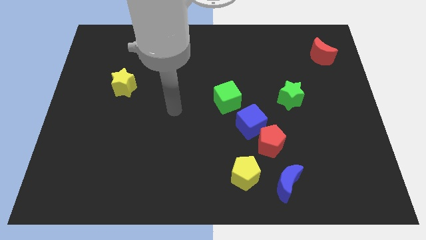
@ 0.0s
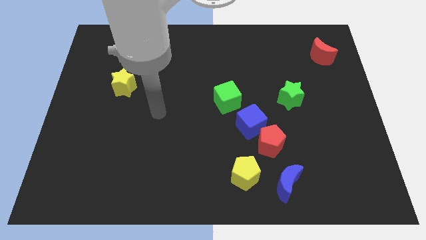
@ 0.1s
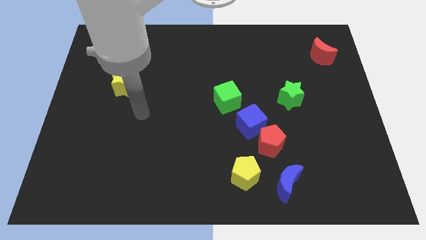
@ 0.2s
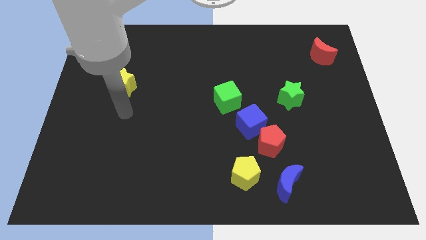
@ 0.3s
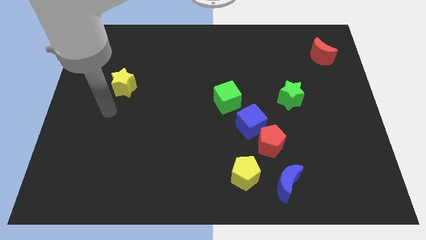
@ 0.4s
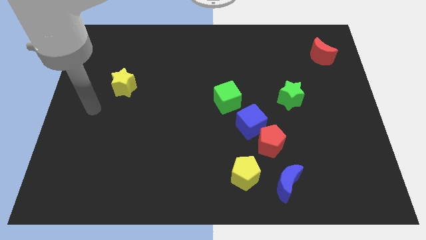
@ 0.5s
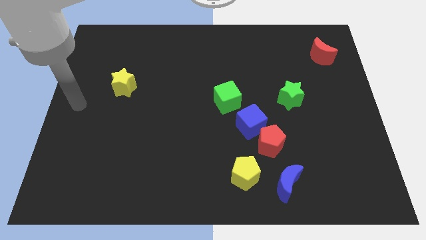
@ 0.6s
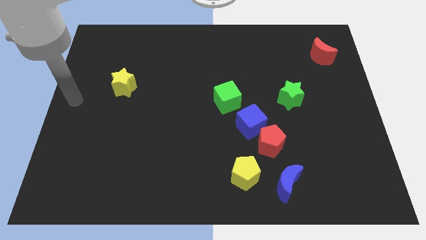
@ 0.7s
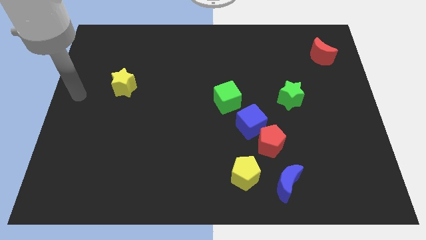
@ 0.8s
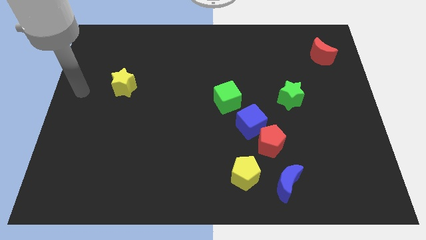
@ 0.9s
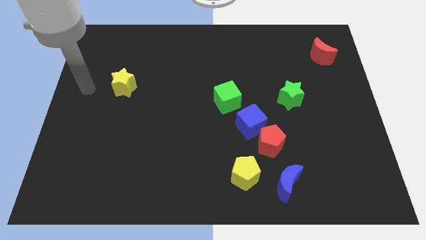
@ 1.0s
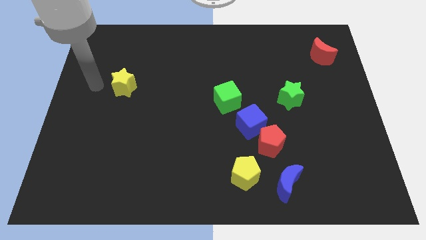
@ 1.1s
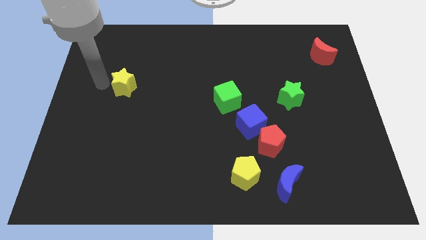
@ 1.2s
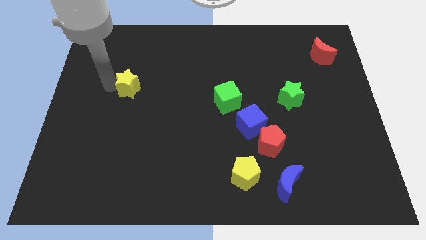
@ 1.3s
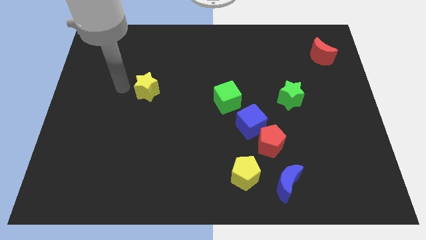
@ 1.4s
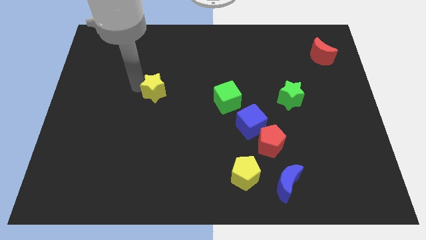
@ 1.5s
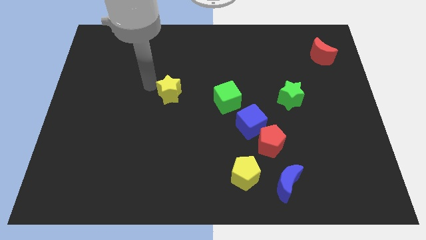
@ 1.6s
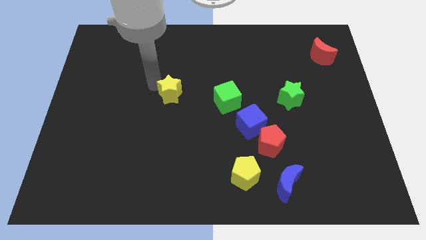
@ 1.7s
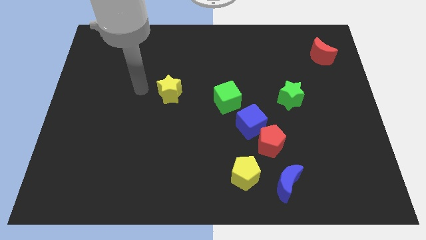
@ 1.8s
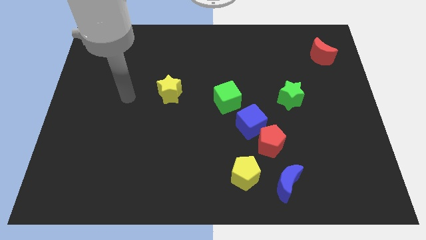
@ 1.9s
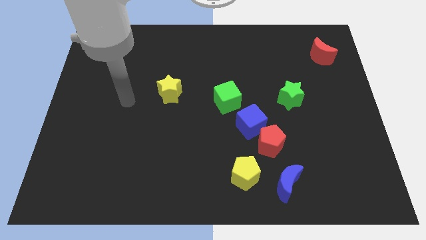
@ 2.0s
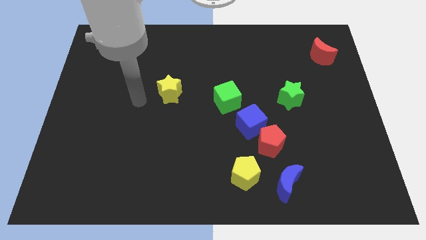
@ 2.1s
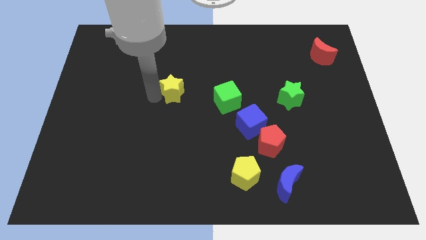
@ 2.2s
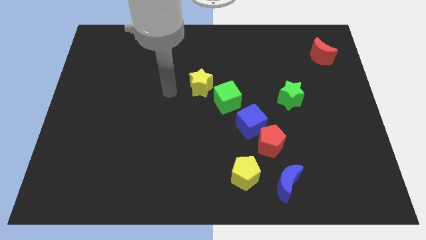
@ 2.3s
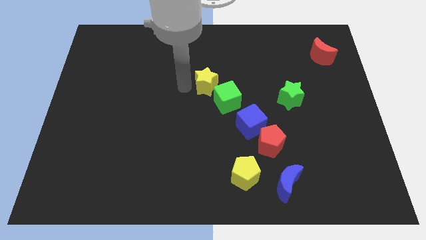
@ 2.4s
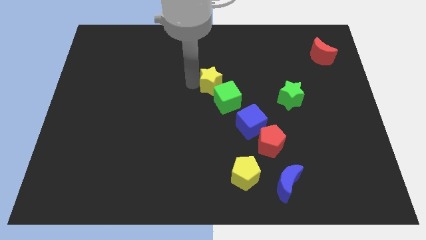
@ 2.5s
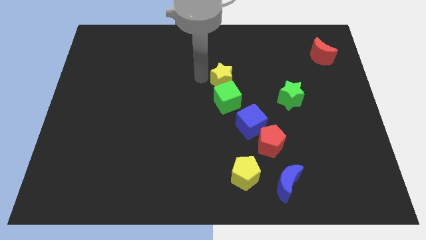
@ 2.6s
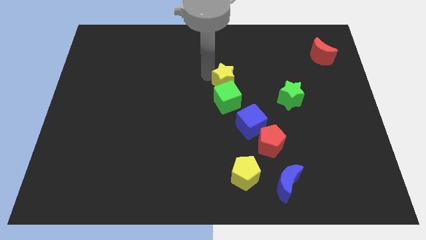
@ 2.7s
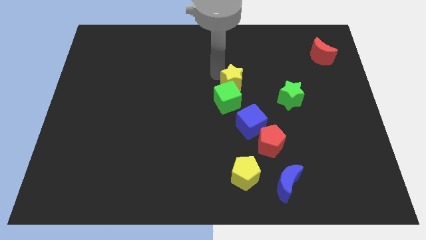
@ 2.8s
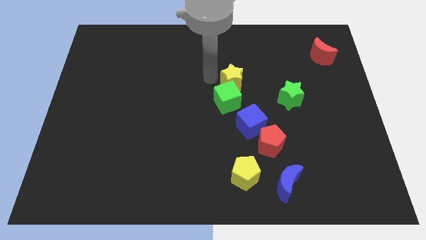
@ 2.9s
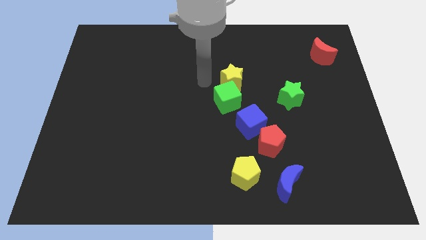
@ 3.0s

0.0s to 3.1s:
push yellow star on top of green cube

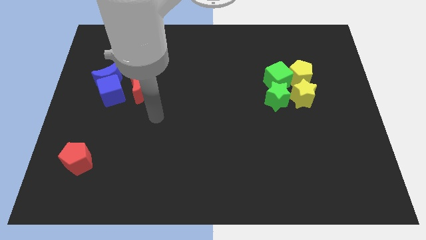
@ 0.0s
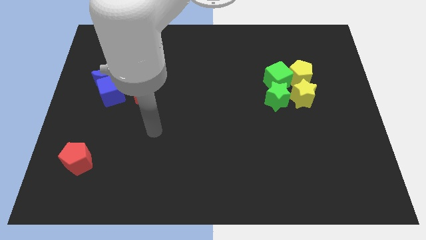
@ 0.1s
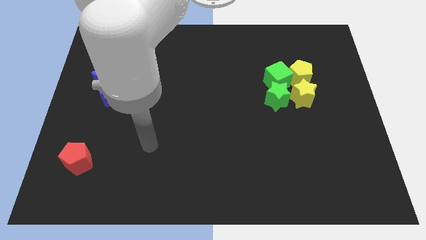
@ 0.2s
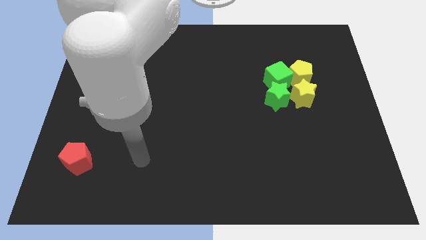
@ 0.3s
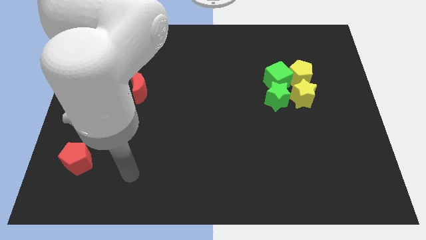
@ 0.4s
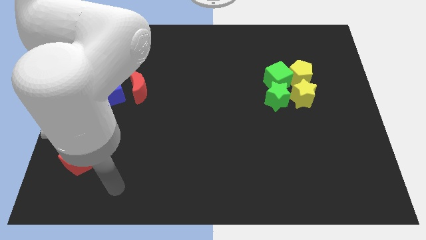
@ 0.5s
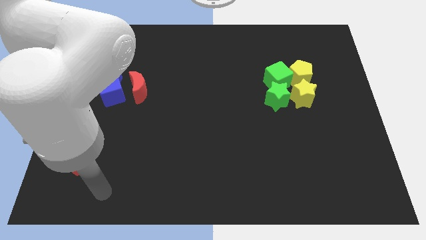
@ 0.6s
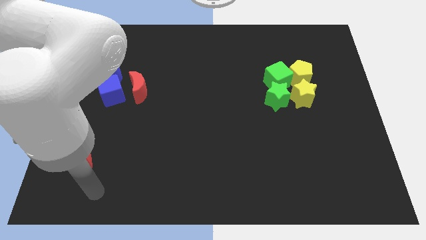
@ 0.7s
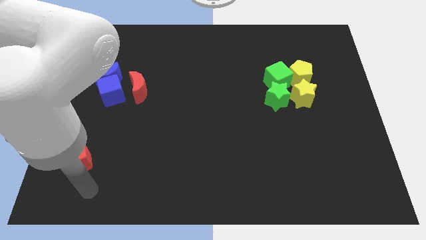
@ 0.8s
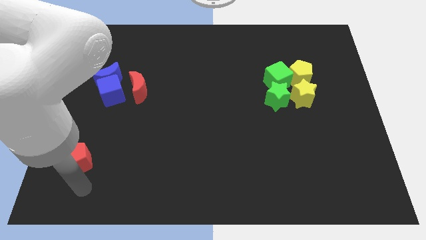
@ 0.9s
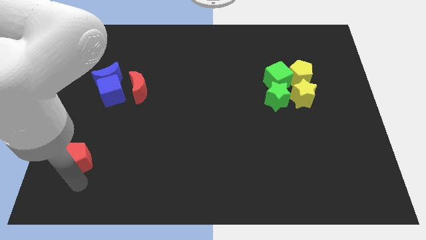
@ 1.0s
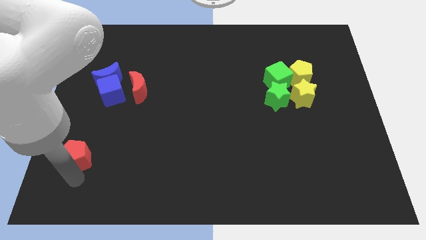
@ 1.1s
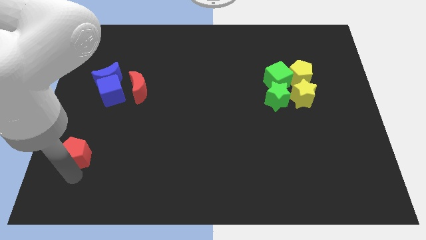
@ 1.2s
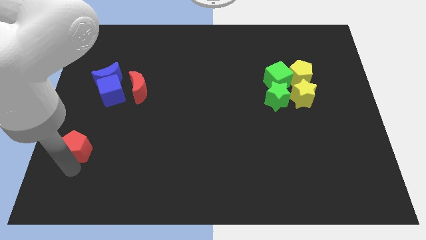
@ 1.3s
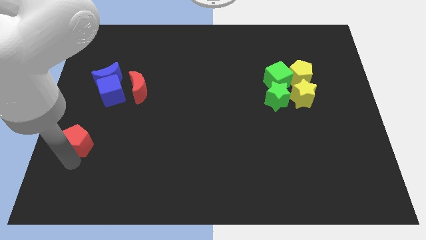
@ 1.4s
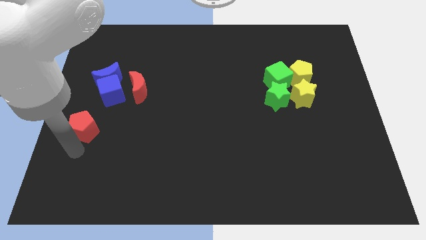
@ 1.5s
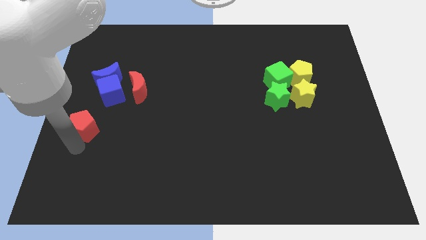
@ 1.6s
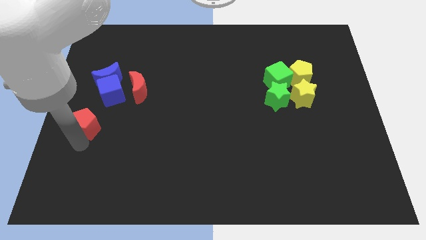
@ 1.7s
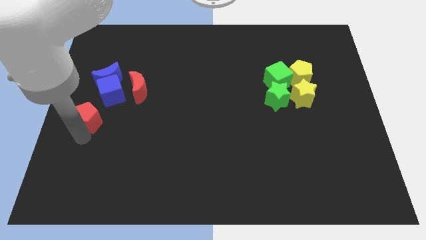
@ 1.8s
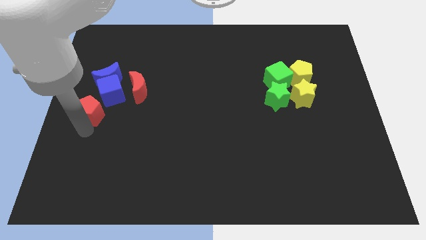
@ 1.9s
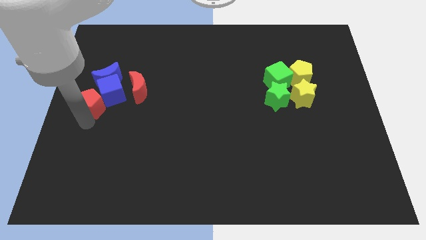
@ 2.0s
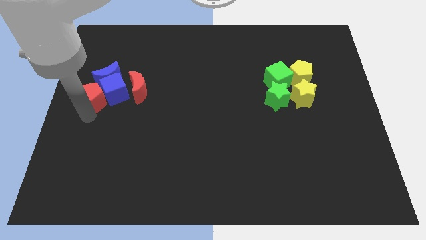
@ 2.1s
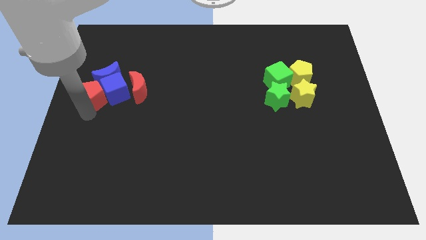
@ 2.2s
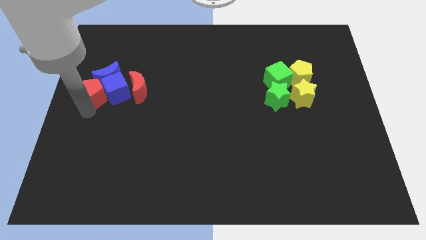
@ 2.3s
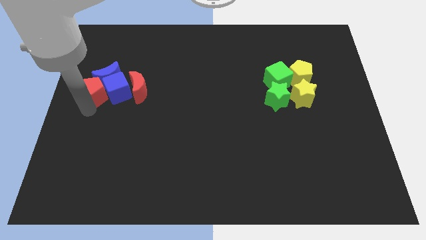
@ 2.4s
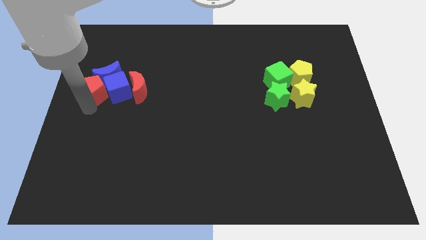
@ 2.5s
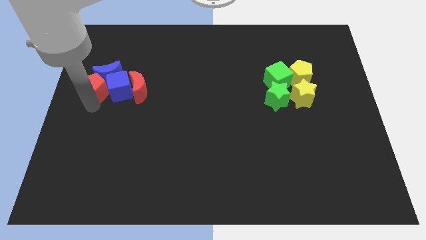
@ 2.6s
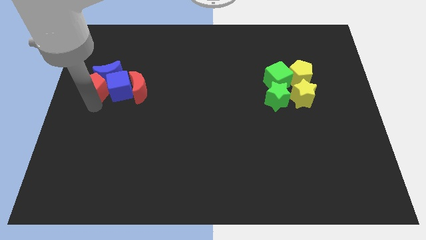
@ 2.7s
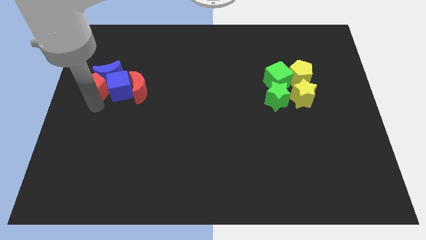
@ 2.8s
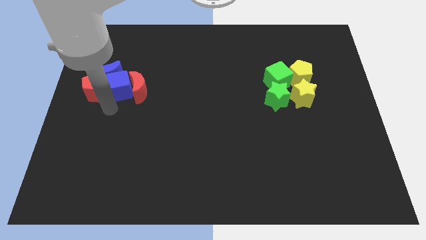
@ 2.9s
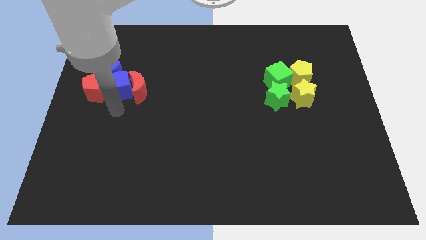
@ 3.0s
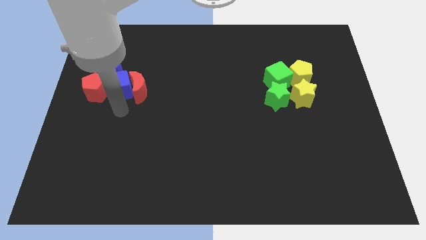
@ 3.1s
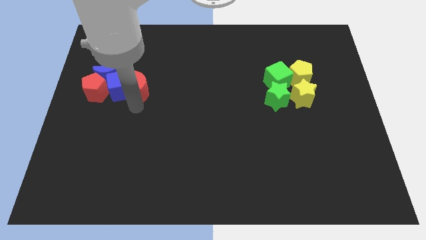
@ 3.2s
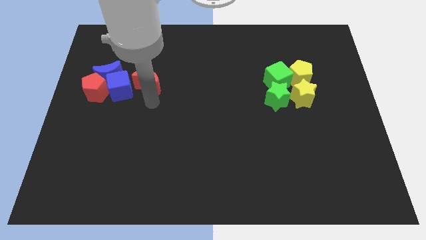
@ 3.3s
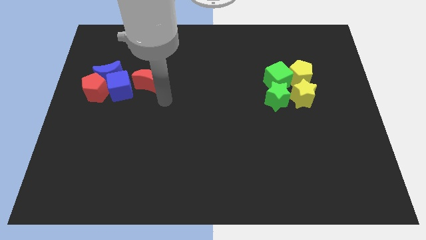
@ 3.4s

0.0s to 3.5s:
move the red pentagon into the blue blocks

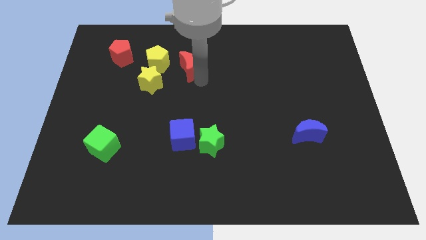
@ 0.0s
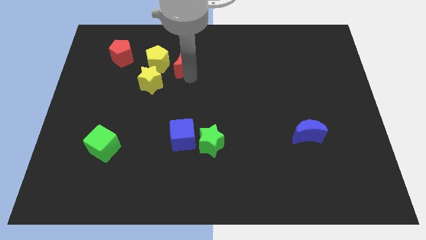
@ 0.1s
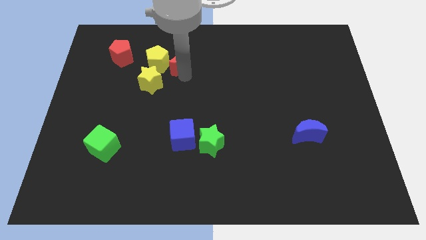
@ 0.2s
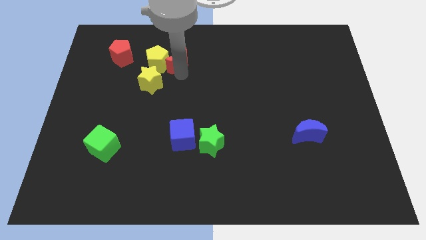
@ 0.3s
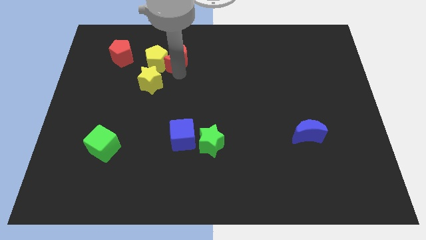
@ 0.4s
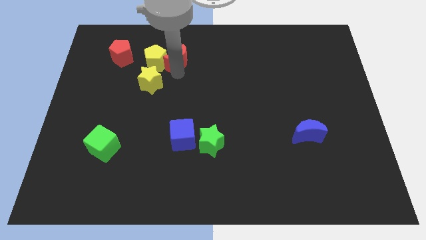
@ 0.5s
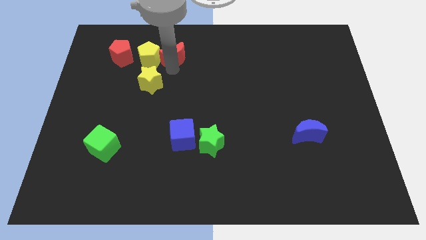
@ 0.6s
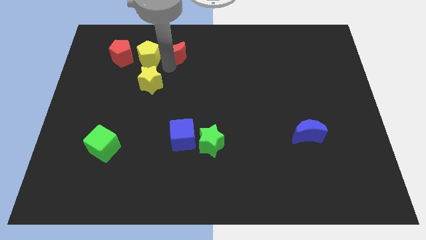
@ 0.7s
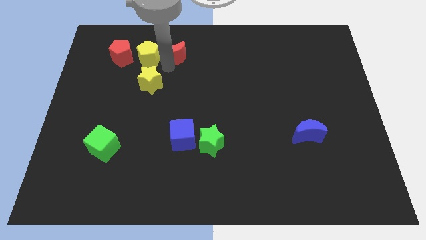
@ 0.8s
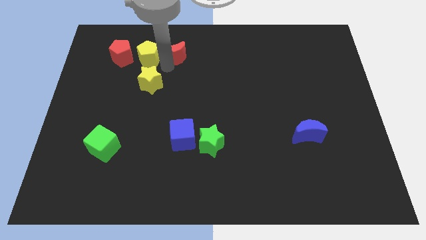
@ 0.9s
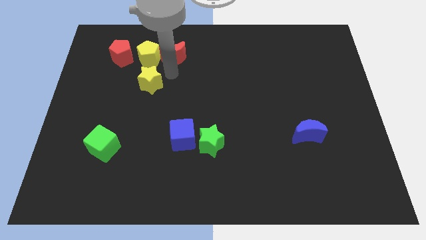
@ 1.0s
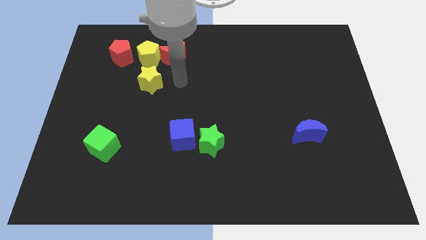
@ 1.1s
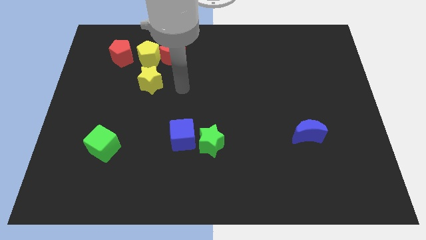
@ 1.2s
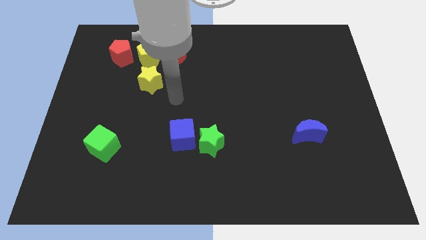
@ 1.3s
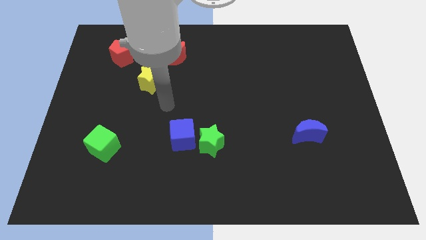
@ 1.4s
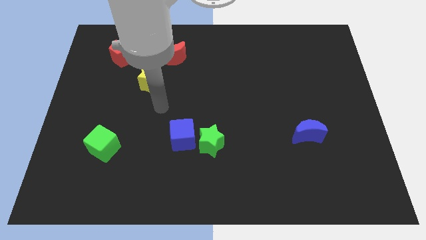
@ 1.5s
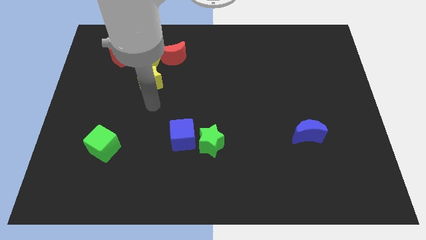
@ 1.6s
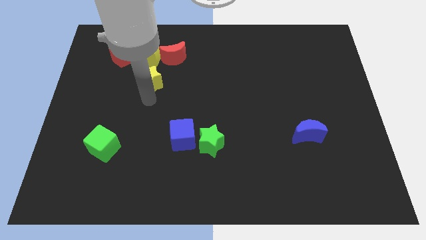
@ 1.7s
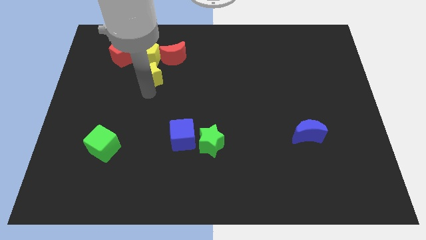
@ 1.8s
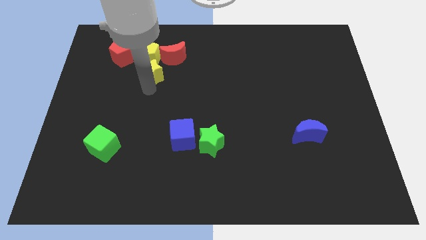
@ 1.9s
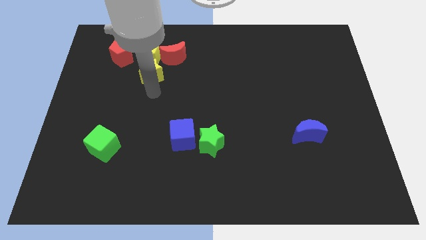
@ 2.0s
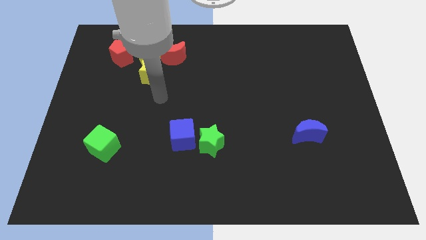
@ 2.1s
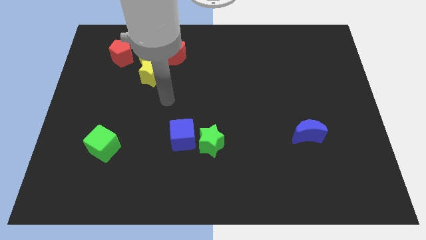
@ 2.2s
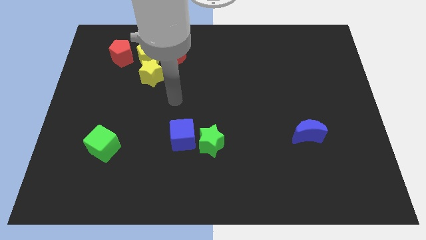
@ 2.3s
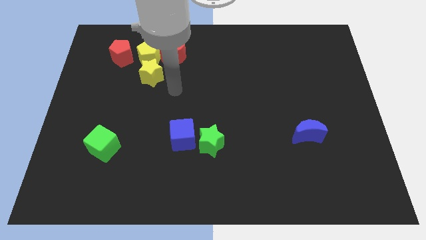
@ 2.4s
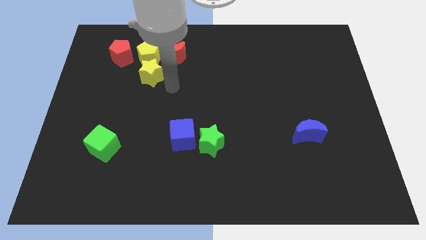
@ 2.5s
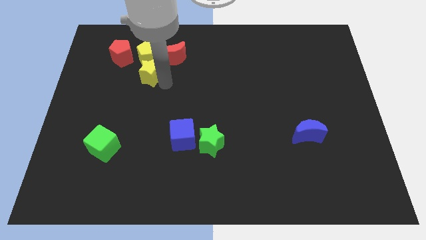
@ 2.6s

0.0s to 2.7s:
push the yellow star into the yellow pentagon
